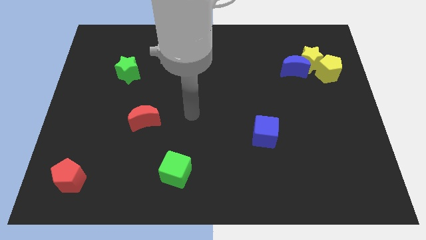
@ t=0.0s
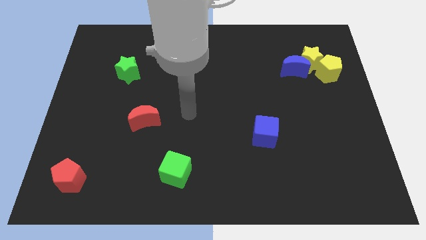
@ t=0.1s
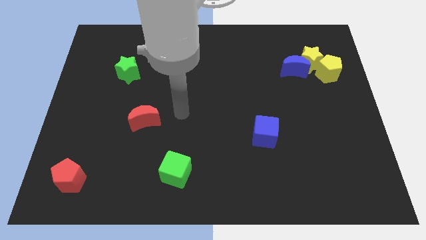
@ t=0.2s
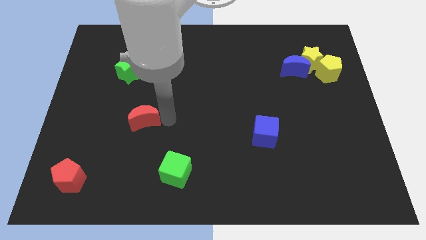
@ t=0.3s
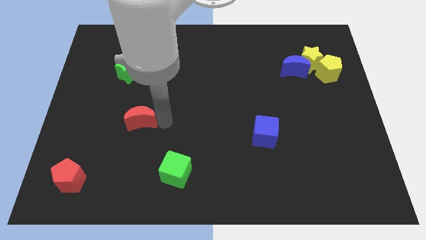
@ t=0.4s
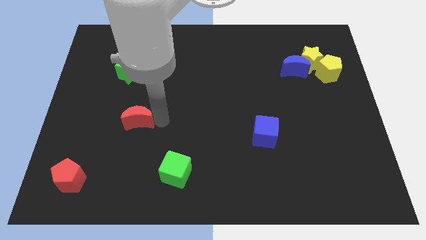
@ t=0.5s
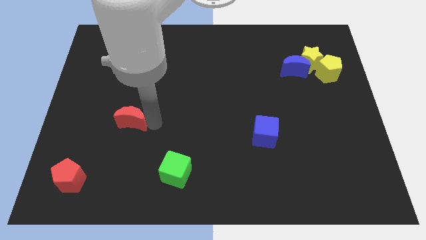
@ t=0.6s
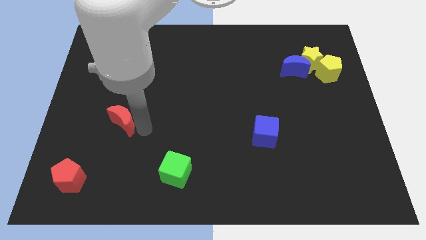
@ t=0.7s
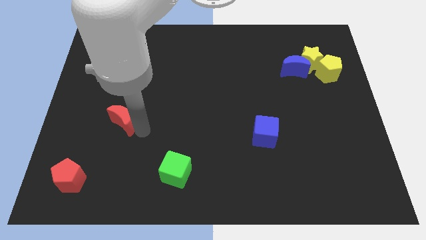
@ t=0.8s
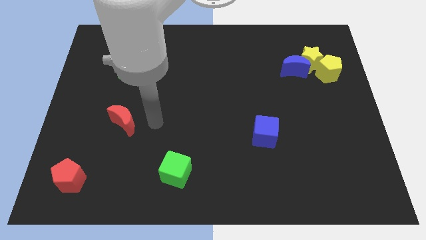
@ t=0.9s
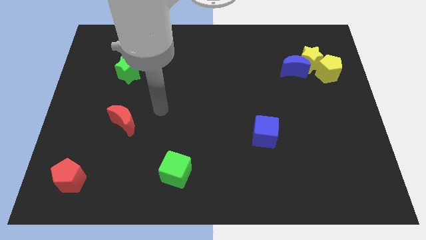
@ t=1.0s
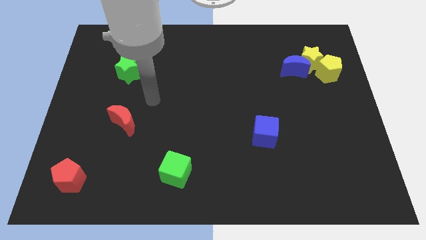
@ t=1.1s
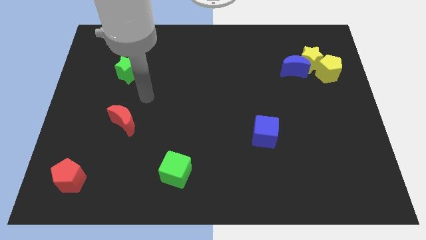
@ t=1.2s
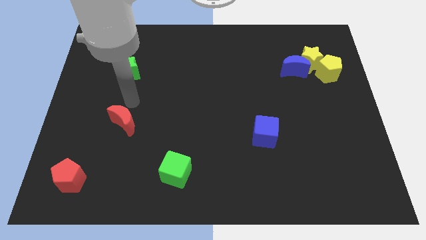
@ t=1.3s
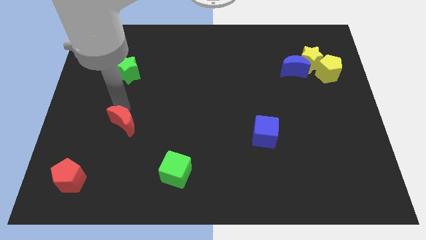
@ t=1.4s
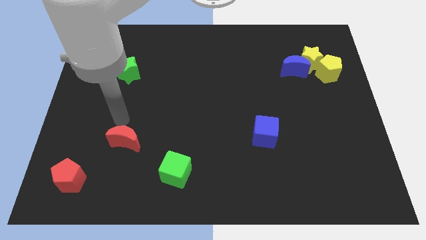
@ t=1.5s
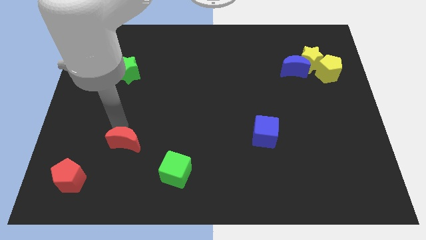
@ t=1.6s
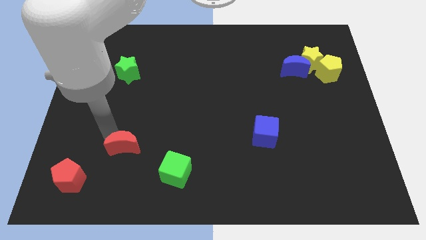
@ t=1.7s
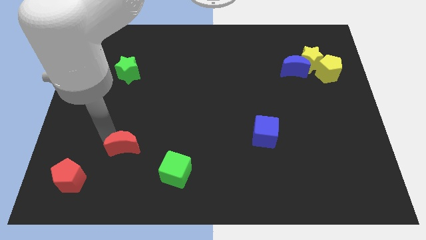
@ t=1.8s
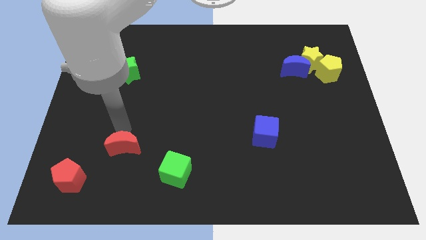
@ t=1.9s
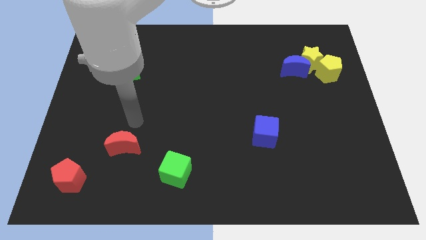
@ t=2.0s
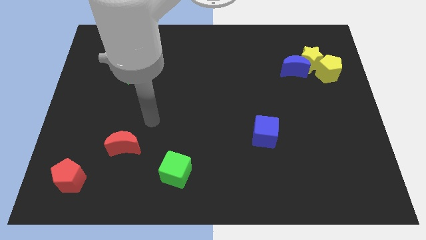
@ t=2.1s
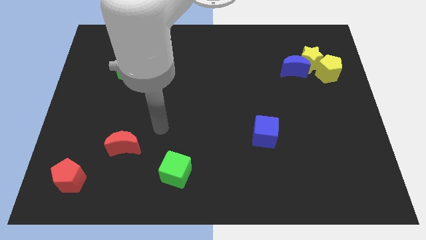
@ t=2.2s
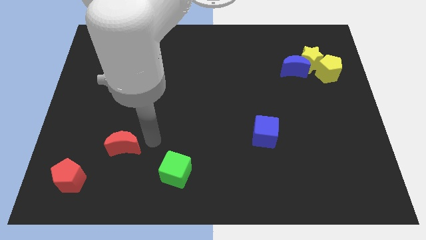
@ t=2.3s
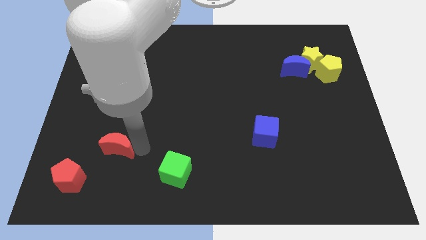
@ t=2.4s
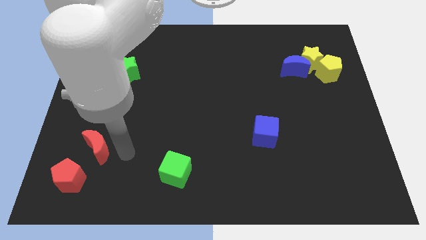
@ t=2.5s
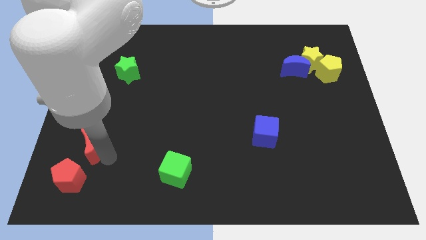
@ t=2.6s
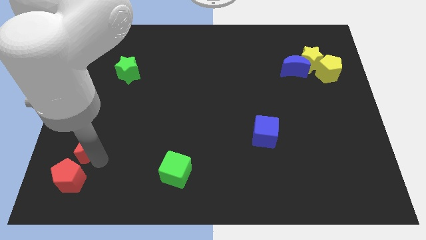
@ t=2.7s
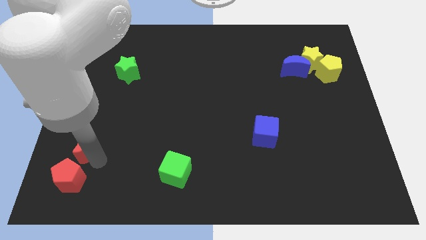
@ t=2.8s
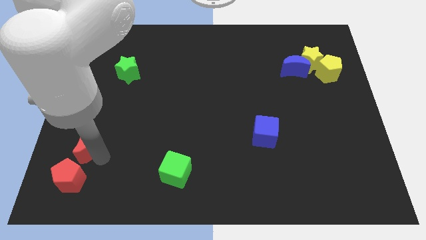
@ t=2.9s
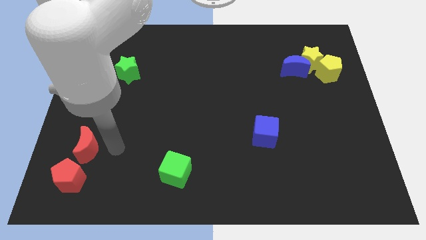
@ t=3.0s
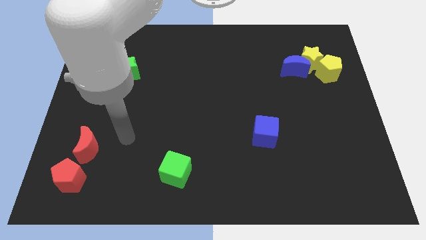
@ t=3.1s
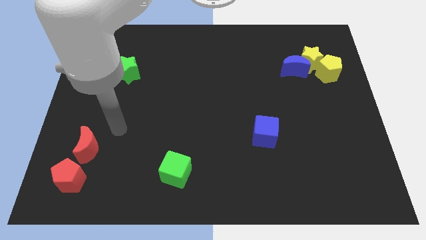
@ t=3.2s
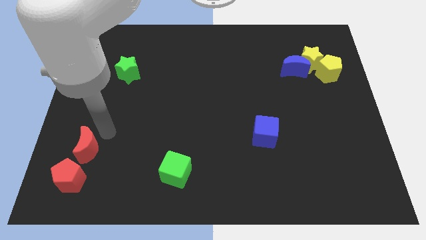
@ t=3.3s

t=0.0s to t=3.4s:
slide the red crescent to the top of red pentagon

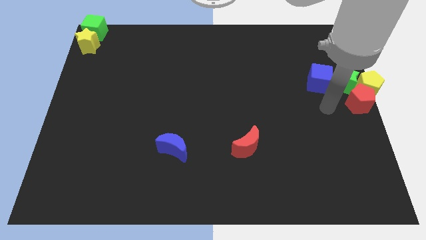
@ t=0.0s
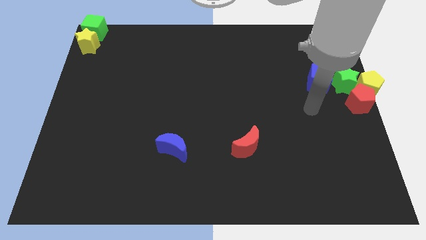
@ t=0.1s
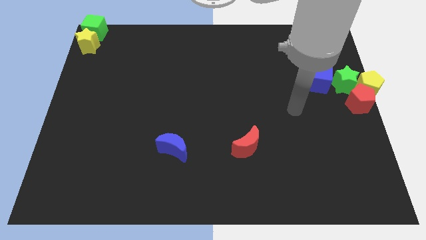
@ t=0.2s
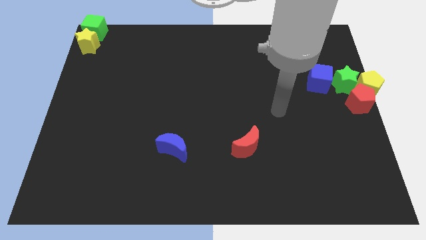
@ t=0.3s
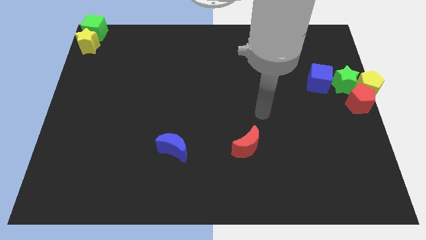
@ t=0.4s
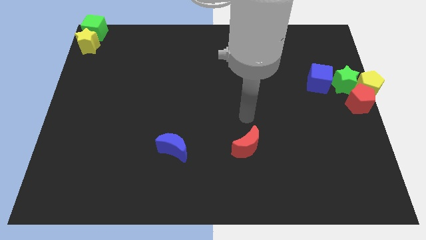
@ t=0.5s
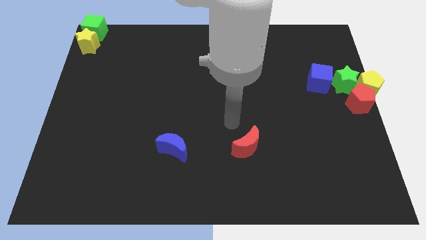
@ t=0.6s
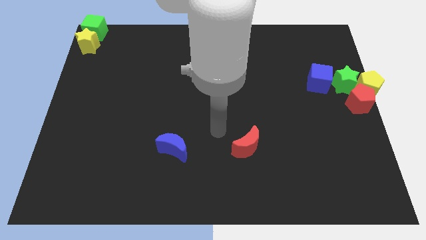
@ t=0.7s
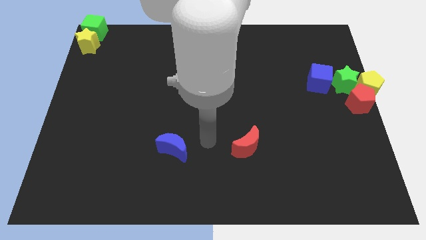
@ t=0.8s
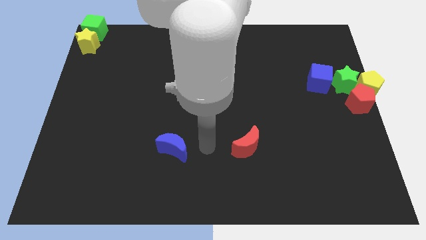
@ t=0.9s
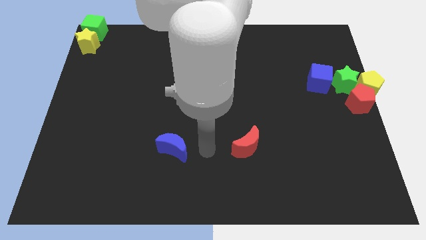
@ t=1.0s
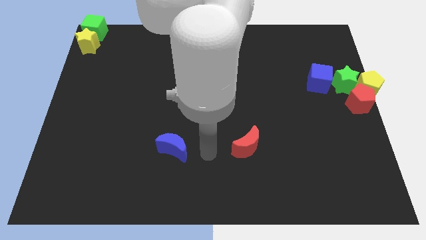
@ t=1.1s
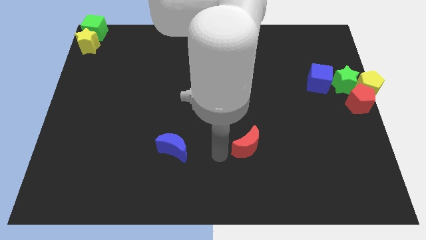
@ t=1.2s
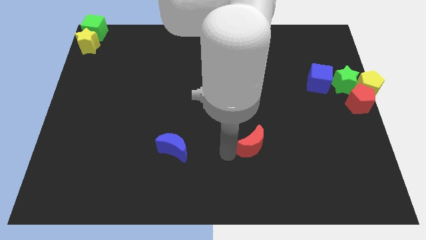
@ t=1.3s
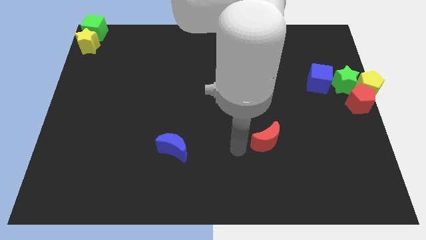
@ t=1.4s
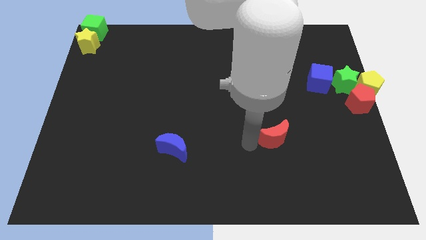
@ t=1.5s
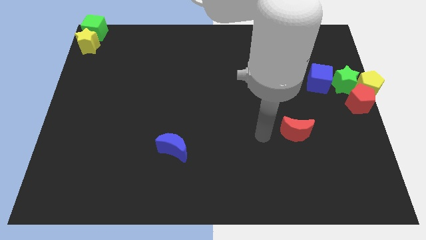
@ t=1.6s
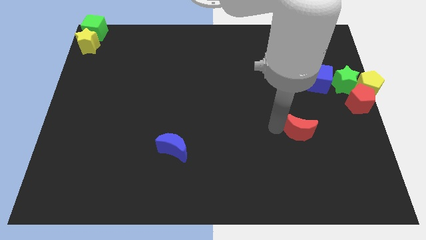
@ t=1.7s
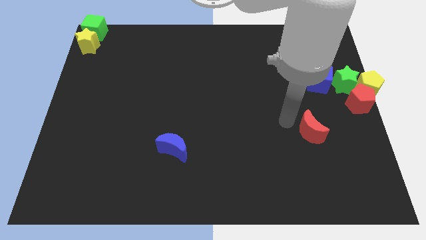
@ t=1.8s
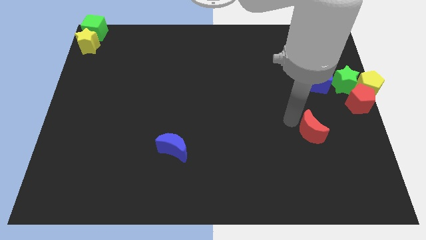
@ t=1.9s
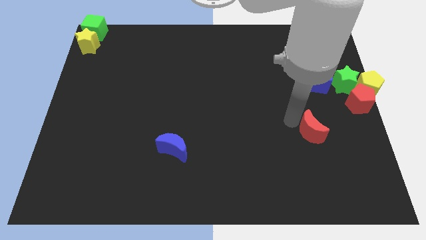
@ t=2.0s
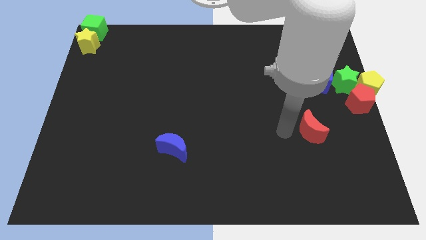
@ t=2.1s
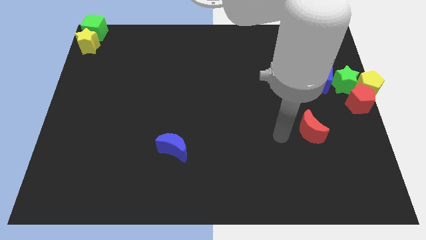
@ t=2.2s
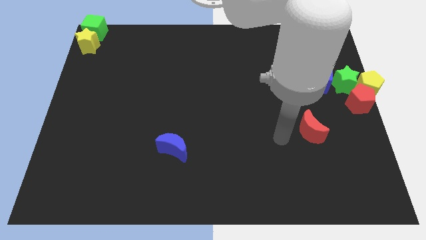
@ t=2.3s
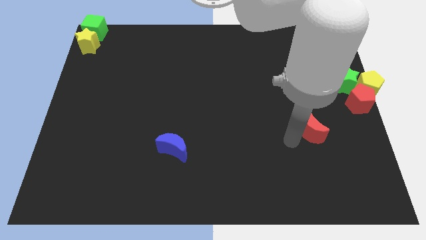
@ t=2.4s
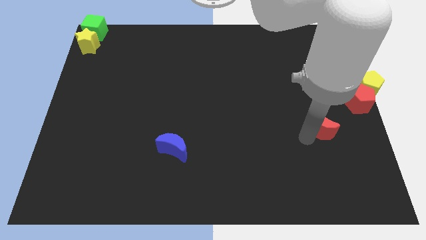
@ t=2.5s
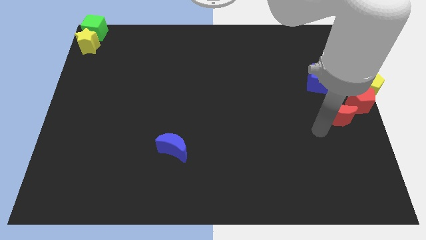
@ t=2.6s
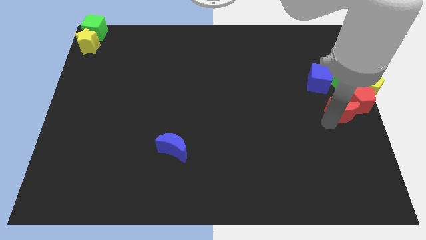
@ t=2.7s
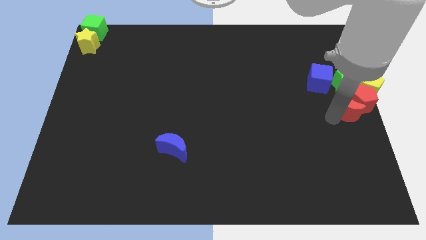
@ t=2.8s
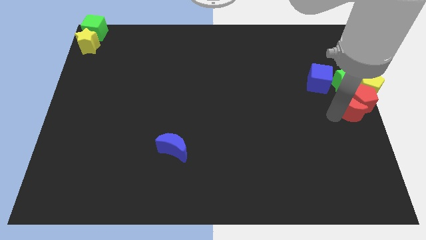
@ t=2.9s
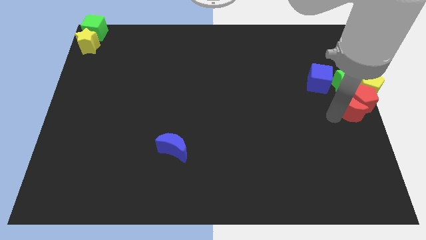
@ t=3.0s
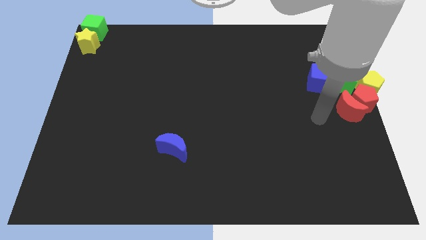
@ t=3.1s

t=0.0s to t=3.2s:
push the red moon towards the red pentagon

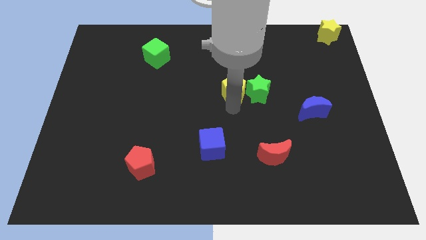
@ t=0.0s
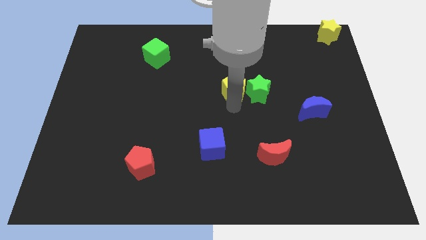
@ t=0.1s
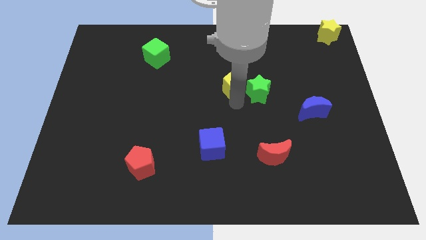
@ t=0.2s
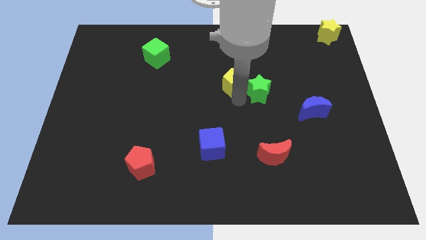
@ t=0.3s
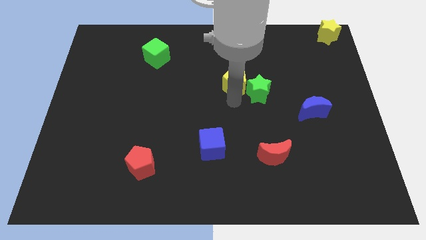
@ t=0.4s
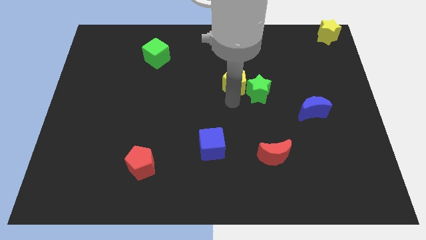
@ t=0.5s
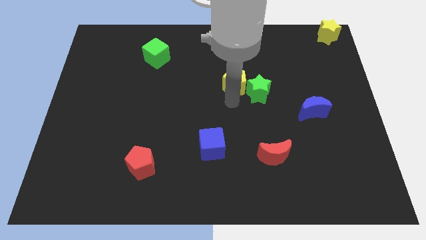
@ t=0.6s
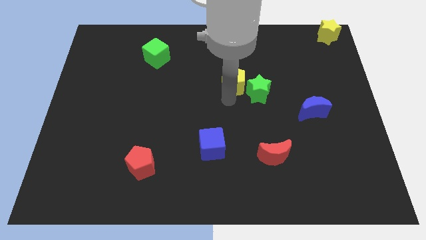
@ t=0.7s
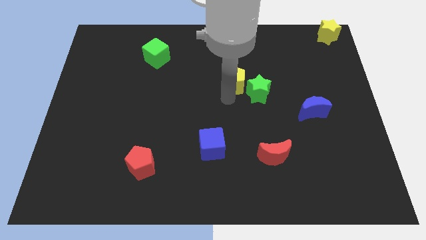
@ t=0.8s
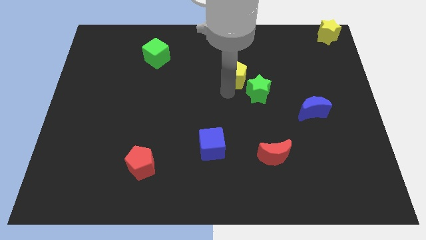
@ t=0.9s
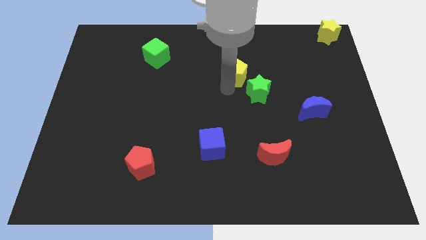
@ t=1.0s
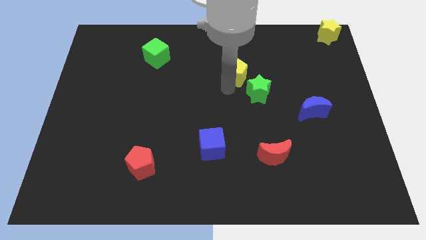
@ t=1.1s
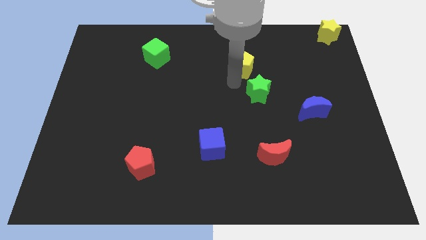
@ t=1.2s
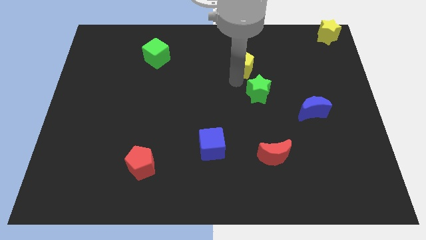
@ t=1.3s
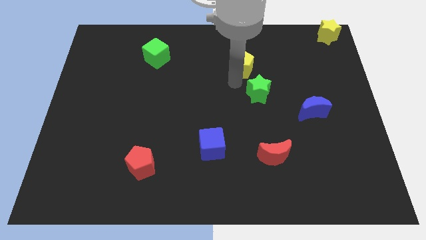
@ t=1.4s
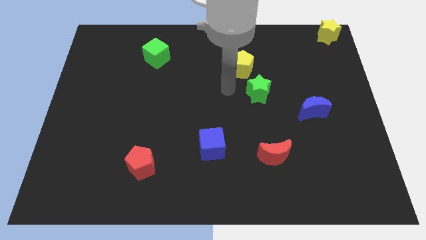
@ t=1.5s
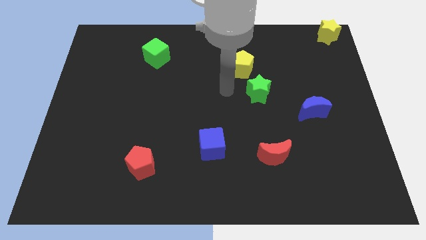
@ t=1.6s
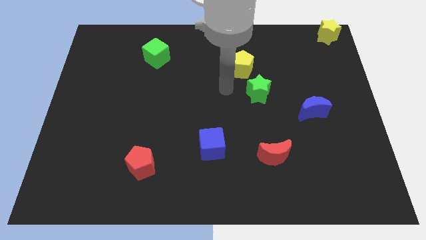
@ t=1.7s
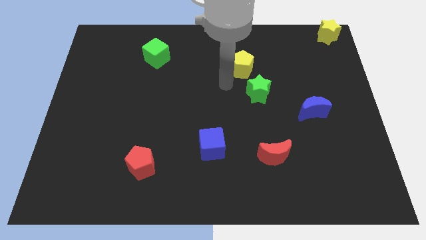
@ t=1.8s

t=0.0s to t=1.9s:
slightly push the yellow pentagon

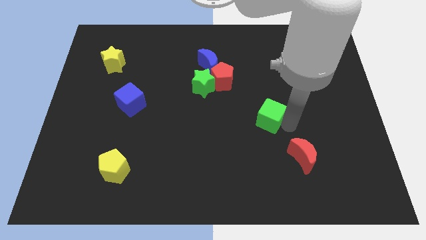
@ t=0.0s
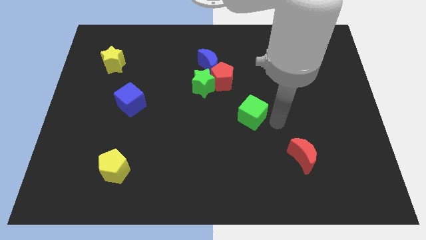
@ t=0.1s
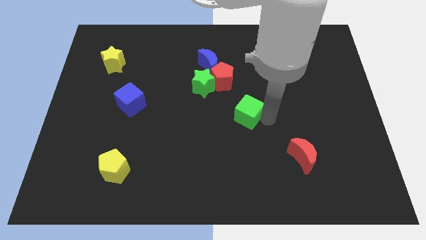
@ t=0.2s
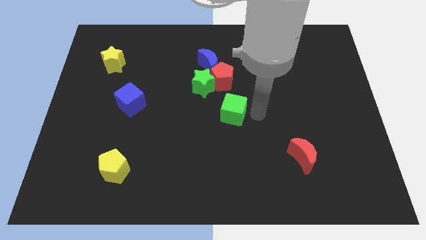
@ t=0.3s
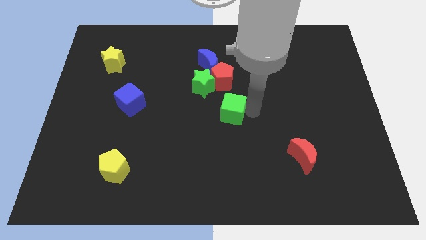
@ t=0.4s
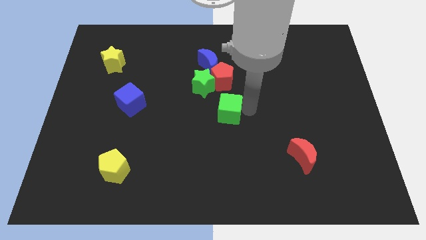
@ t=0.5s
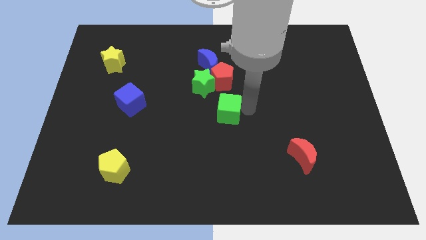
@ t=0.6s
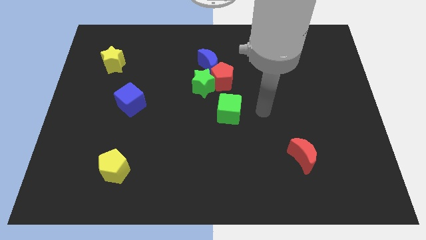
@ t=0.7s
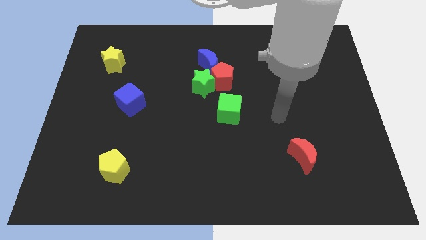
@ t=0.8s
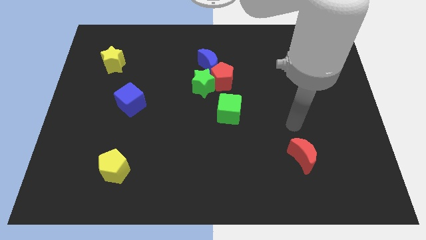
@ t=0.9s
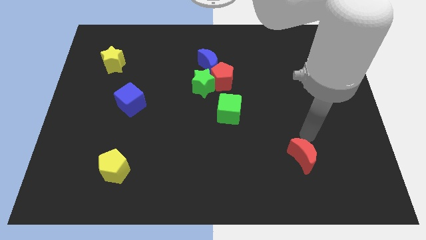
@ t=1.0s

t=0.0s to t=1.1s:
place the green cube below the red pentagon
